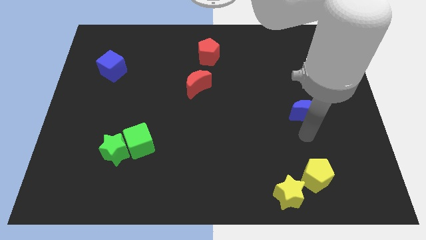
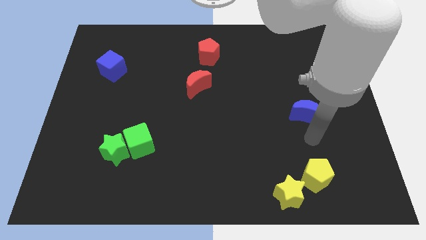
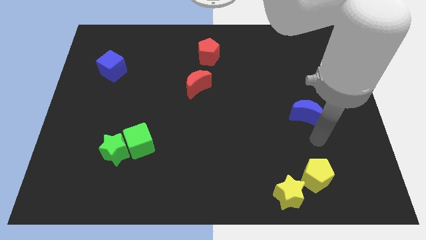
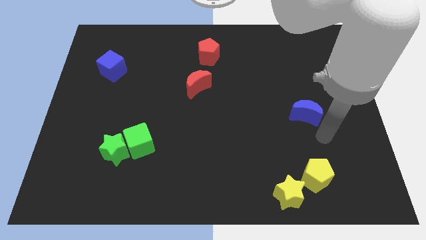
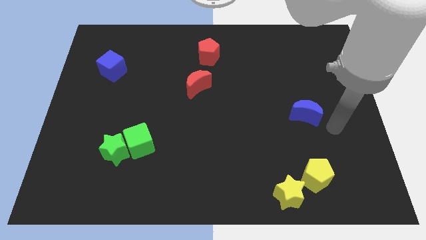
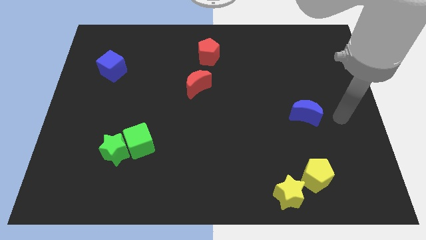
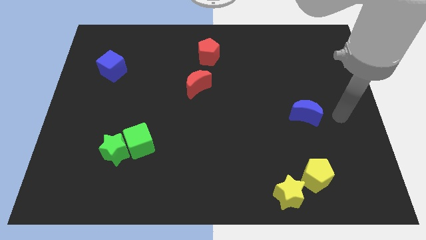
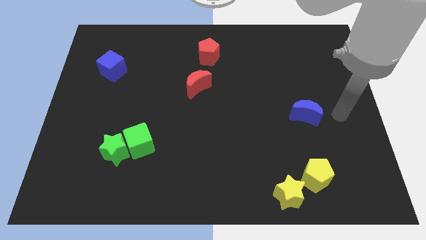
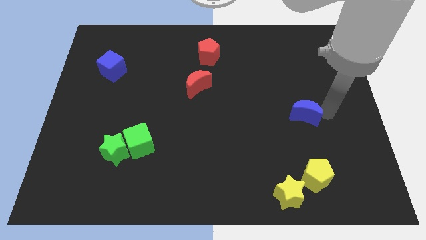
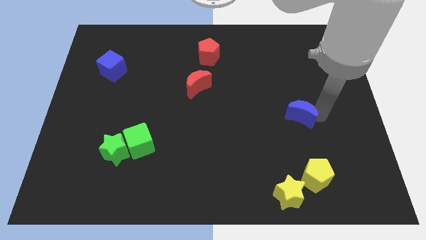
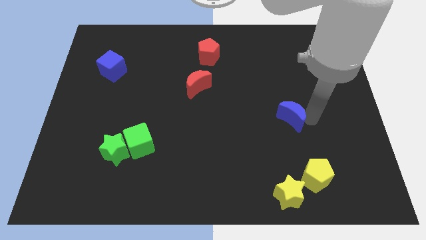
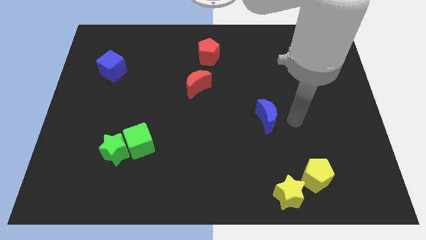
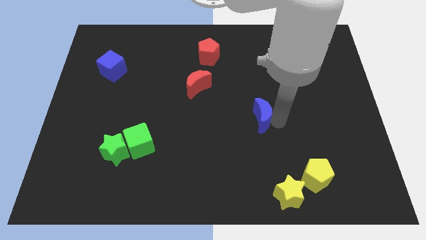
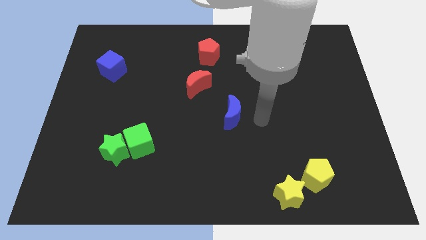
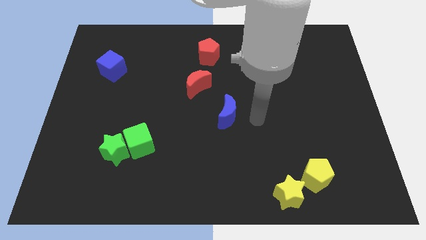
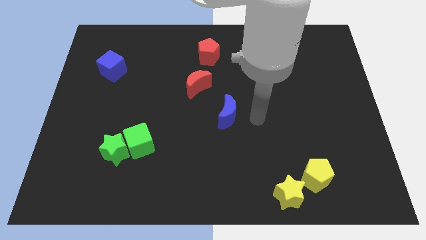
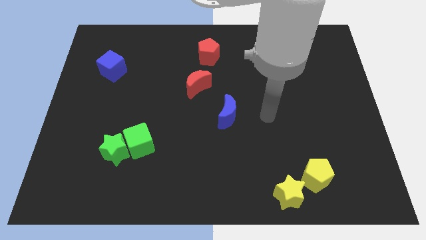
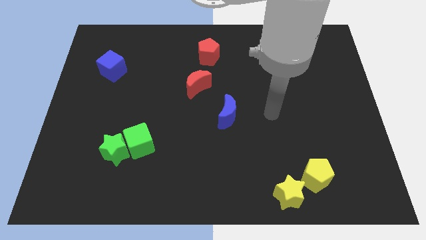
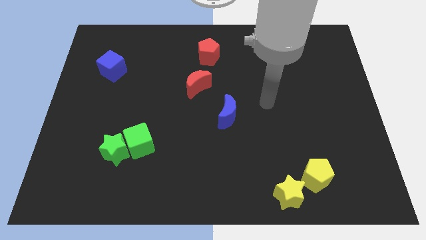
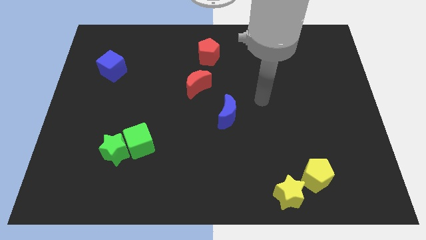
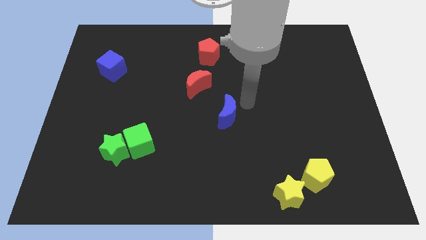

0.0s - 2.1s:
place blue crescent to the center

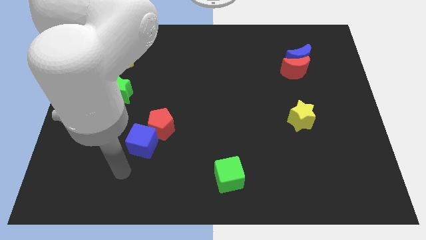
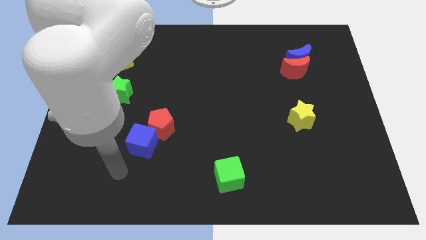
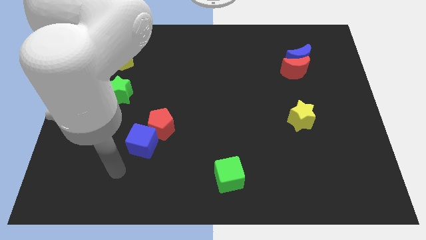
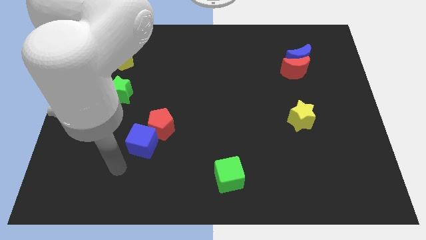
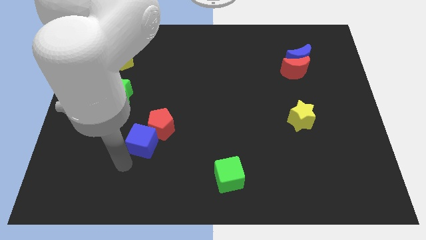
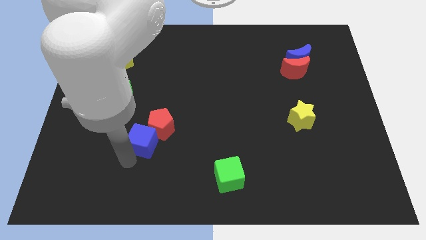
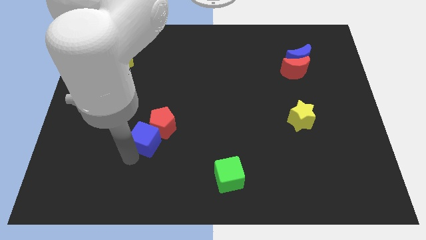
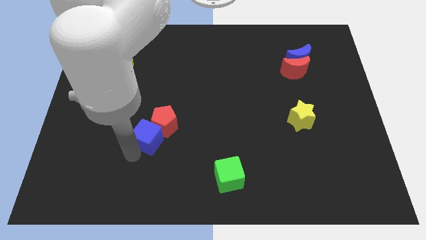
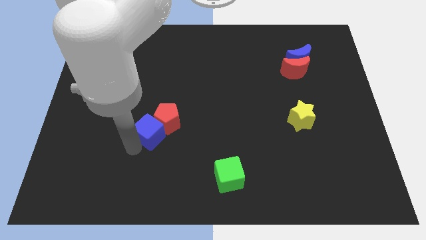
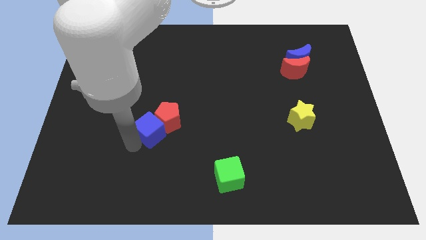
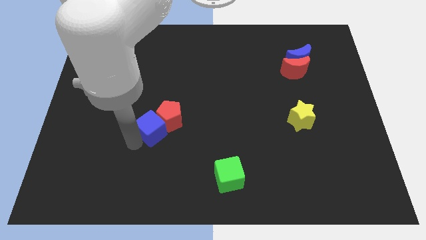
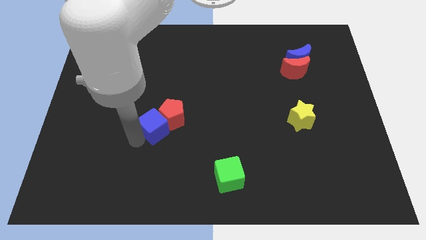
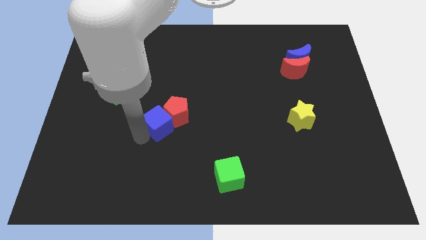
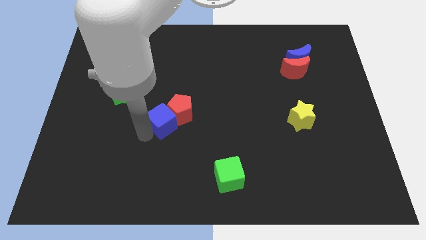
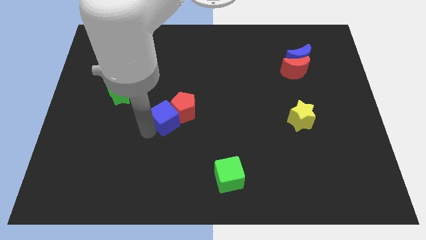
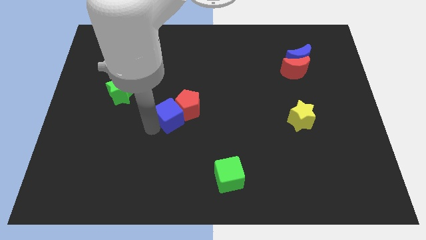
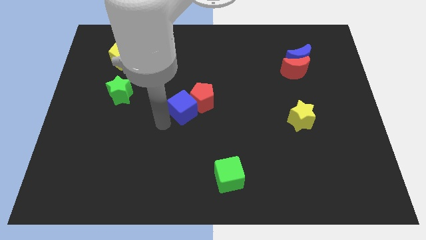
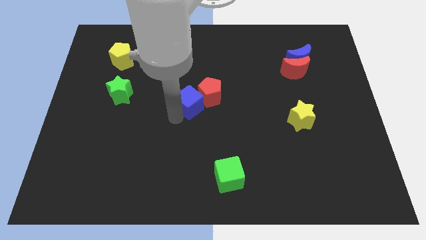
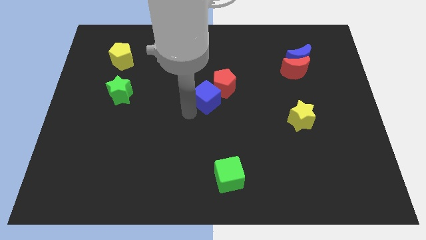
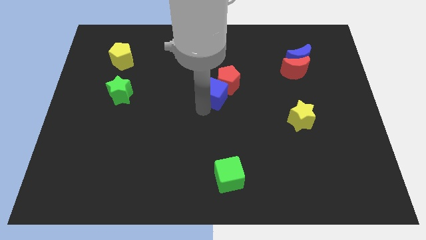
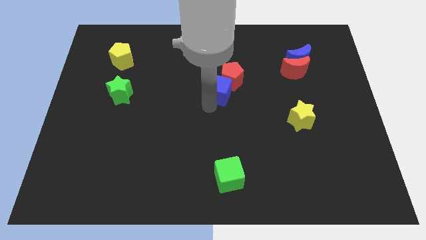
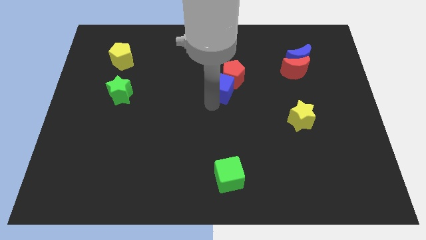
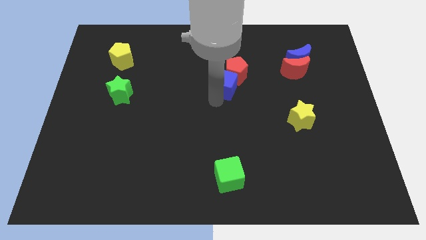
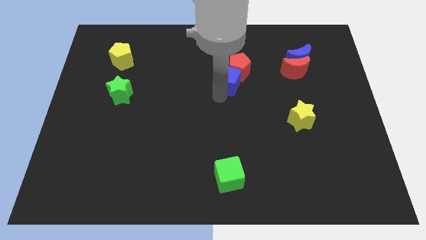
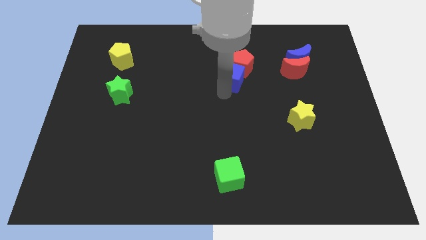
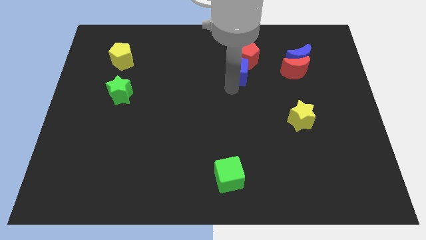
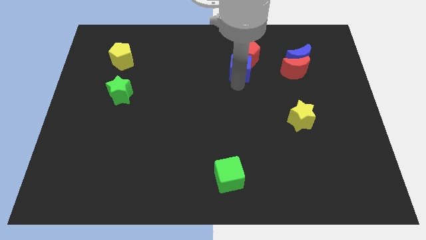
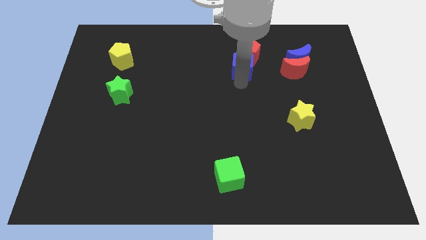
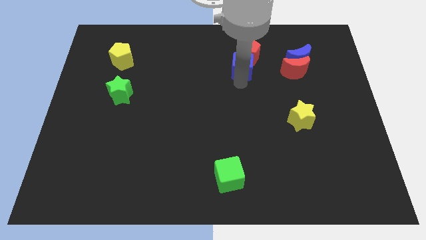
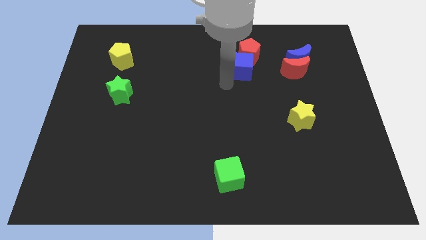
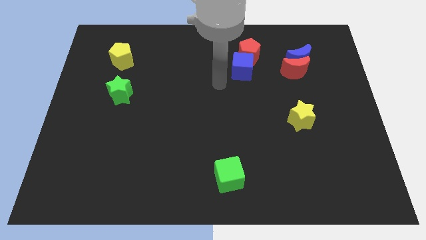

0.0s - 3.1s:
push the blue cube to the center of the board along with the red pentagon

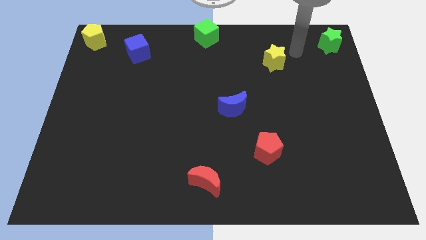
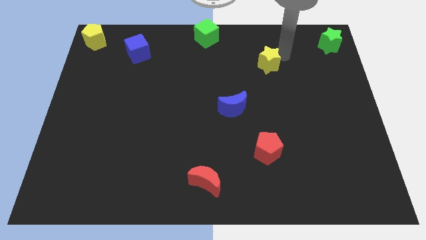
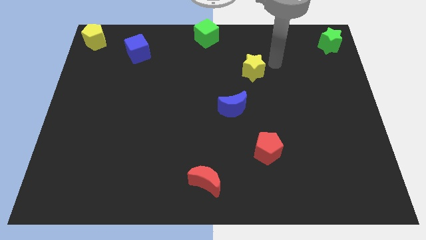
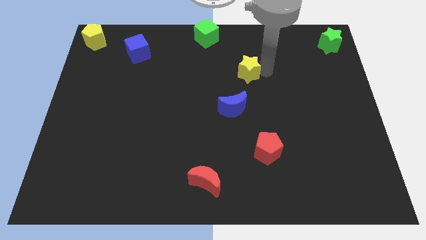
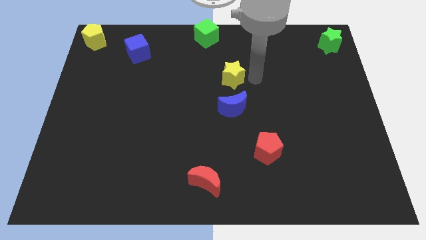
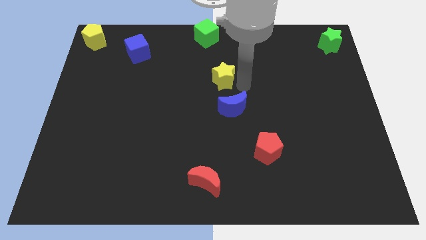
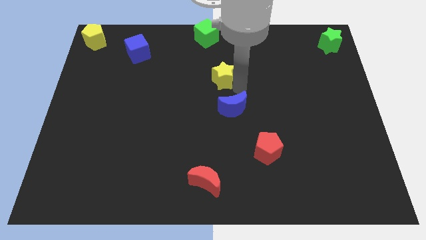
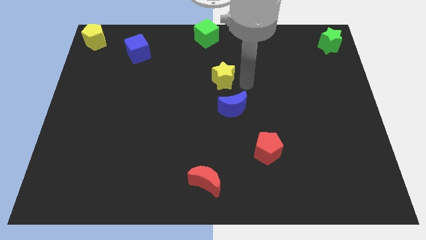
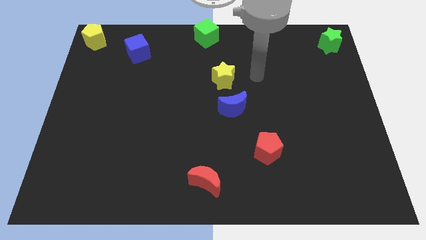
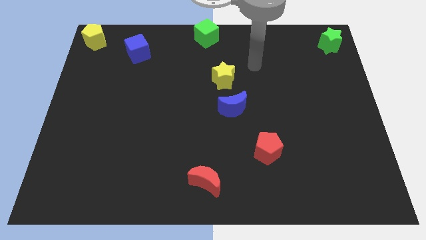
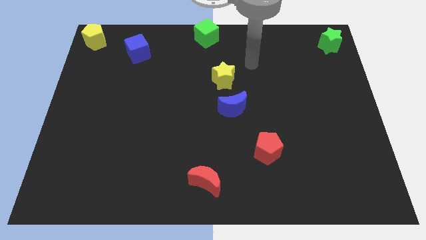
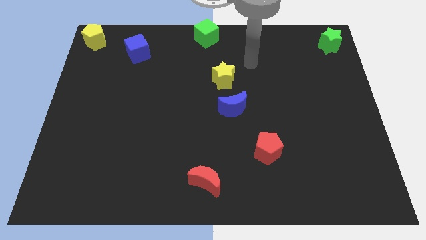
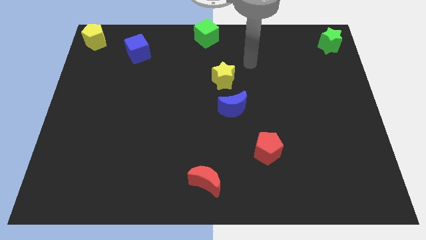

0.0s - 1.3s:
adjust the yellow star between the green cube and blue crescent

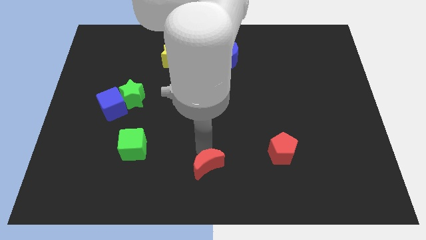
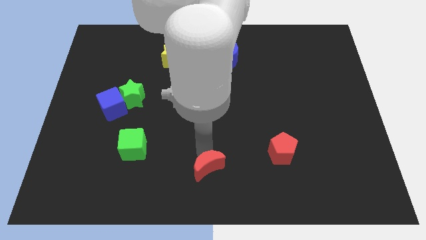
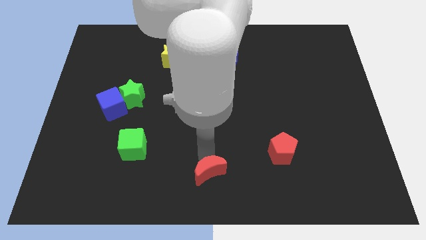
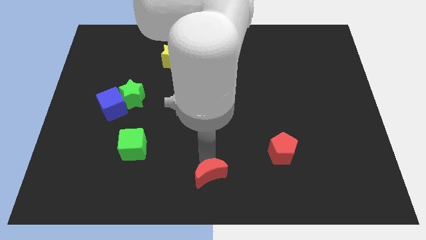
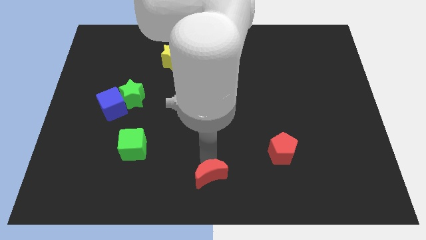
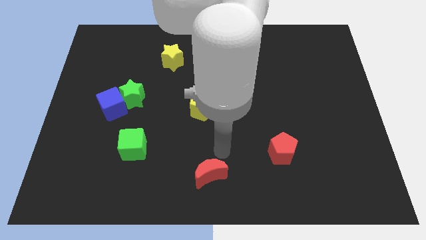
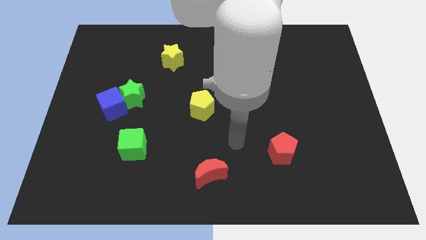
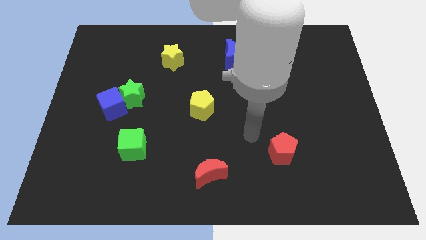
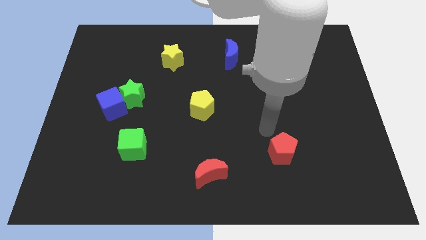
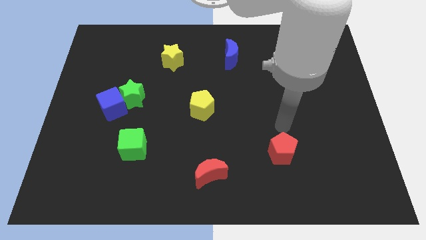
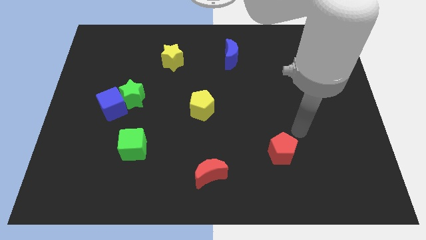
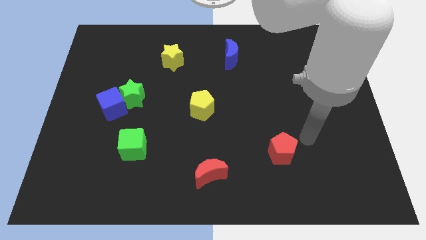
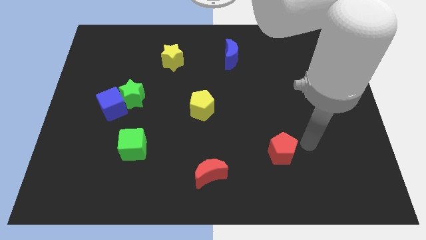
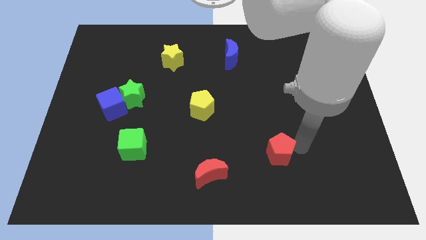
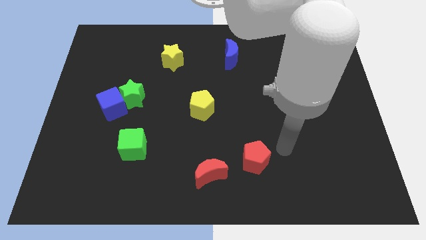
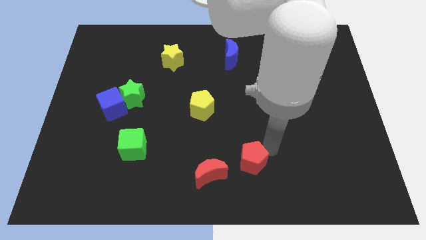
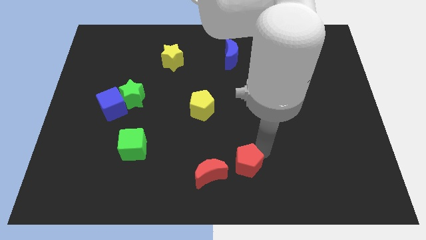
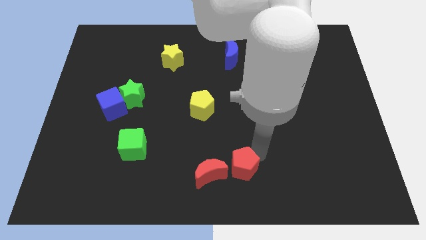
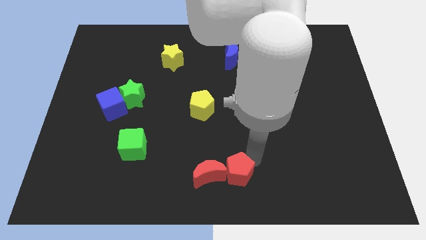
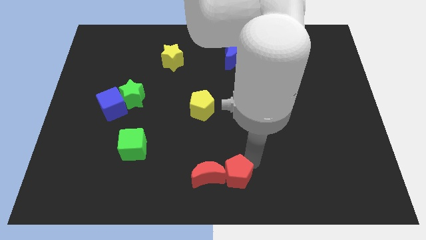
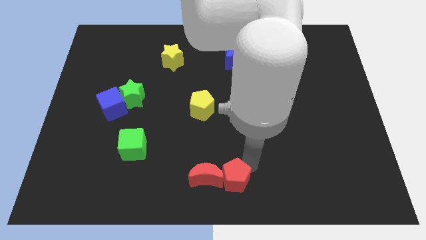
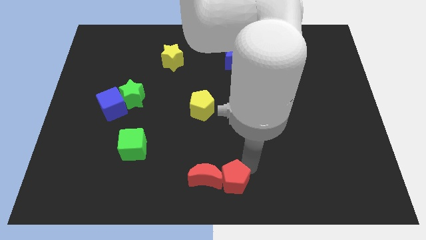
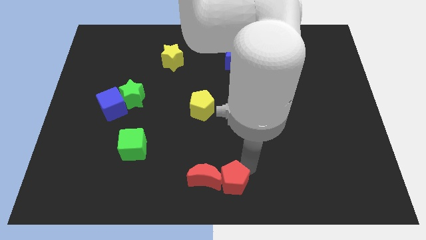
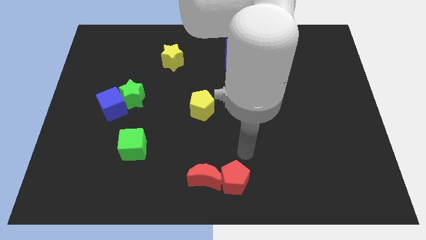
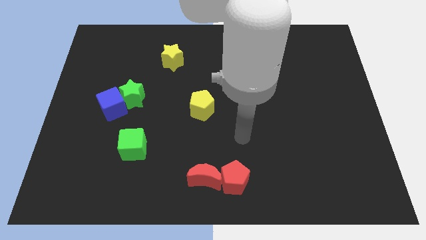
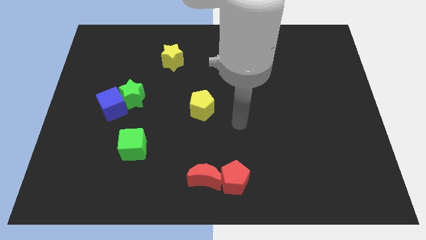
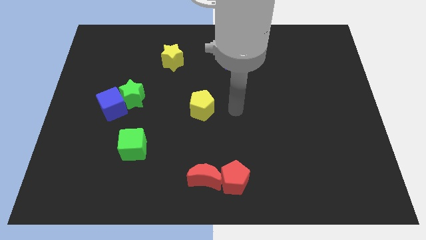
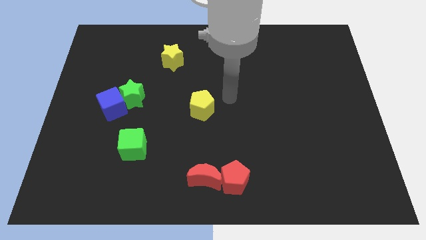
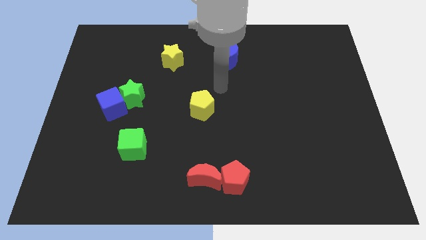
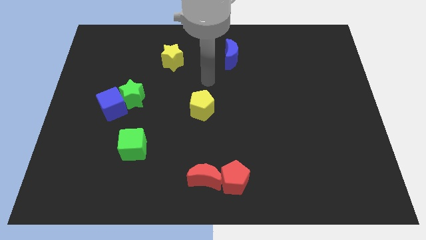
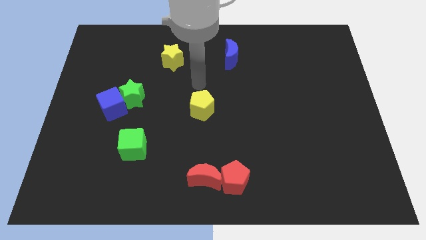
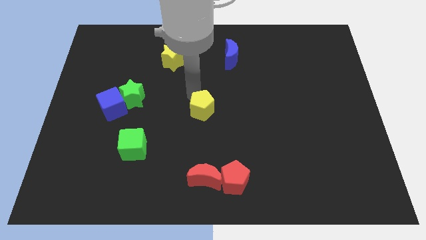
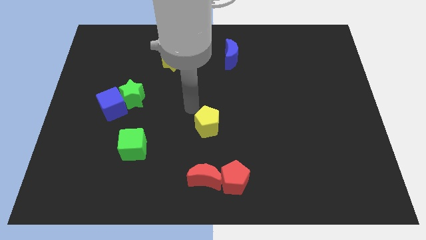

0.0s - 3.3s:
move red blocks towards the bottom middle
